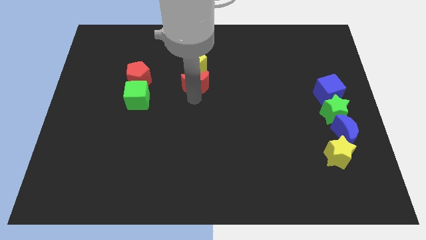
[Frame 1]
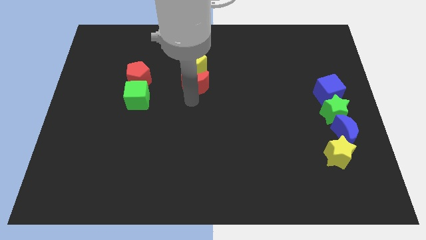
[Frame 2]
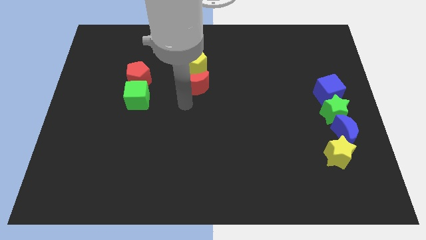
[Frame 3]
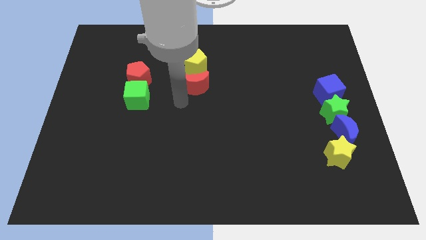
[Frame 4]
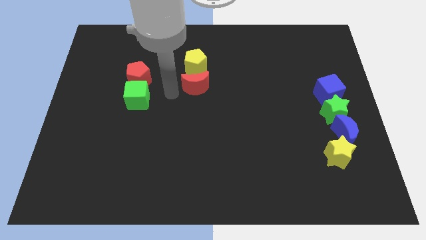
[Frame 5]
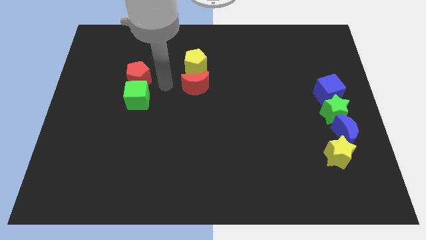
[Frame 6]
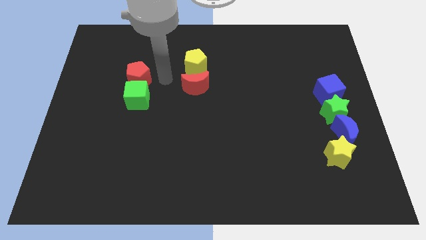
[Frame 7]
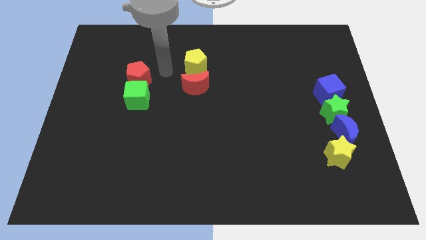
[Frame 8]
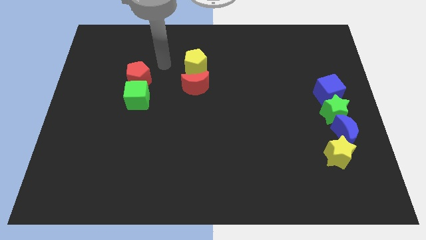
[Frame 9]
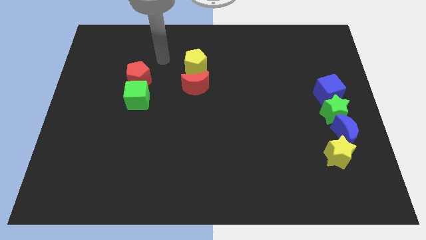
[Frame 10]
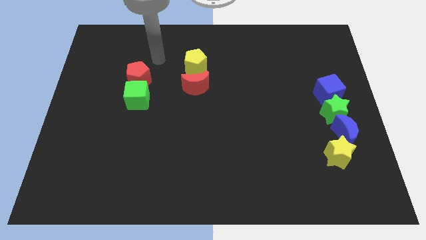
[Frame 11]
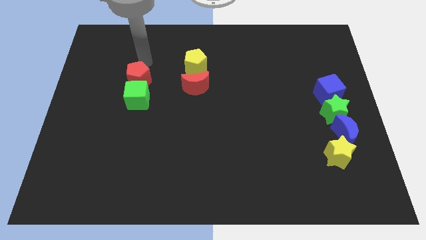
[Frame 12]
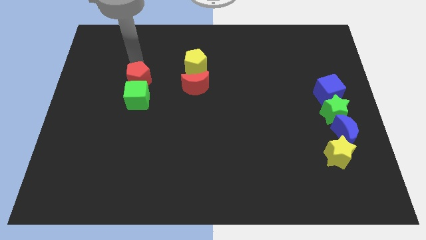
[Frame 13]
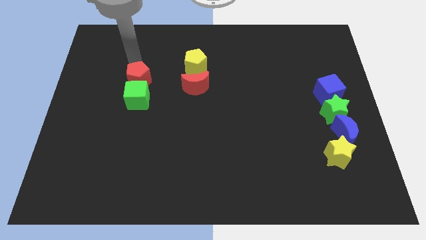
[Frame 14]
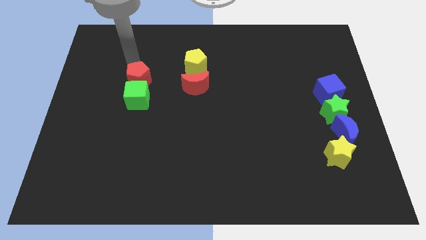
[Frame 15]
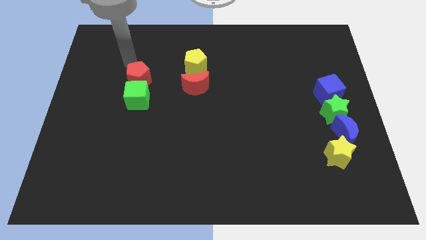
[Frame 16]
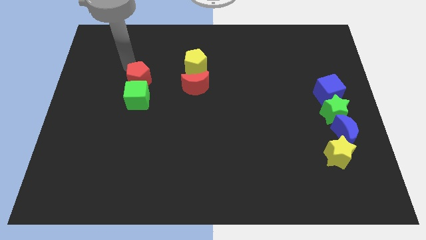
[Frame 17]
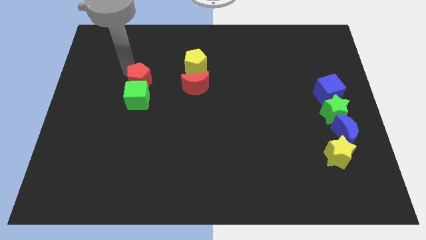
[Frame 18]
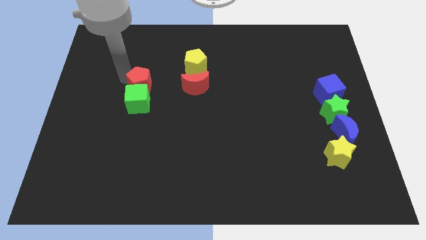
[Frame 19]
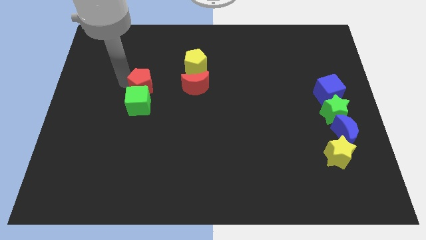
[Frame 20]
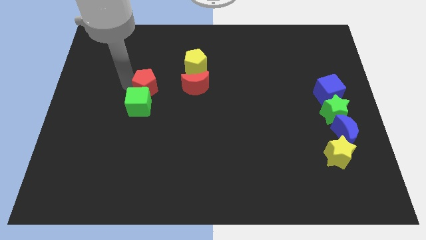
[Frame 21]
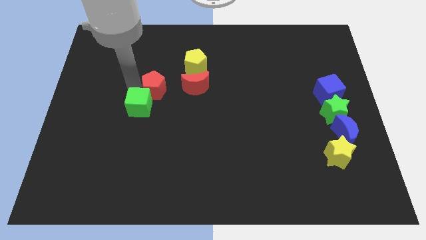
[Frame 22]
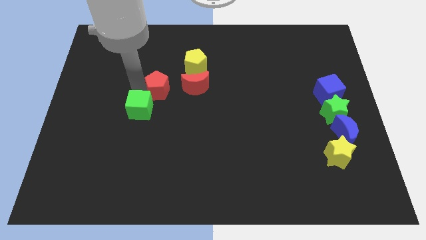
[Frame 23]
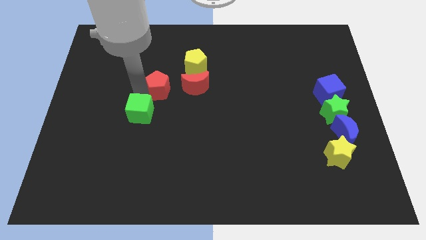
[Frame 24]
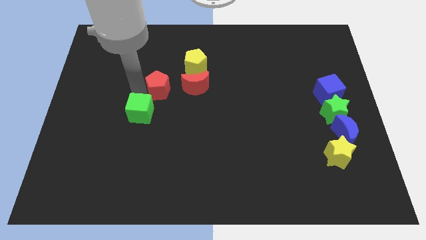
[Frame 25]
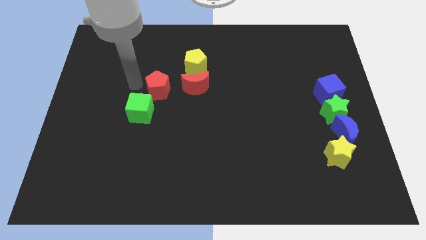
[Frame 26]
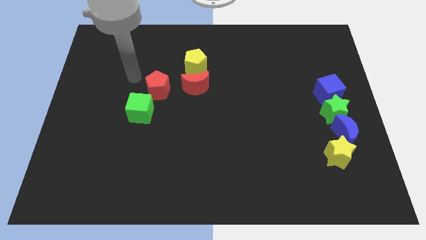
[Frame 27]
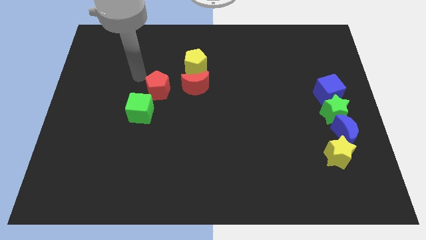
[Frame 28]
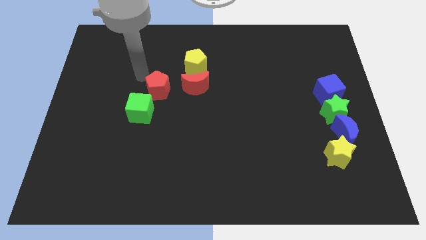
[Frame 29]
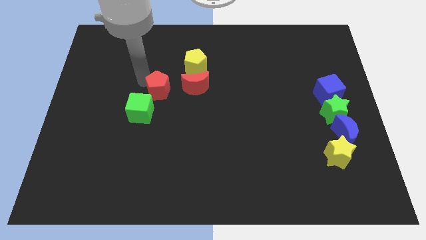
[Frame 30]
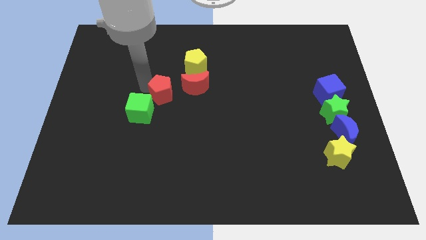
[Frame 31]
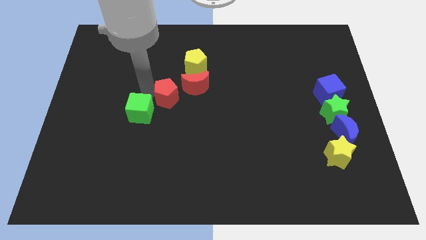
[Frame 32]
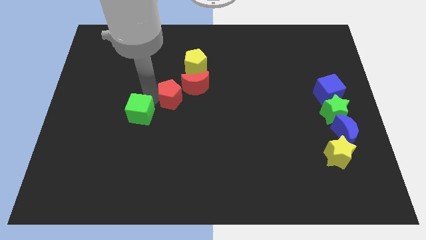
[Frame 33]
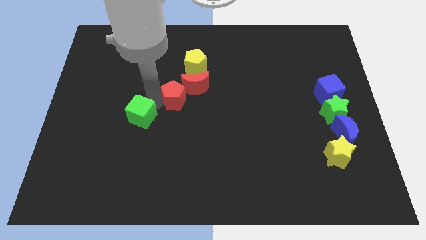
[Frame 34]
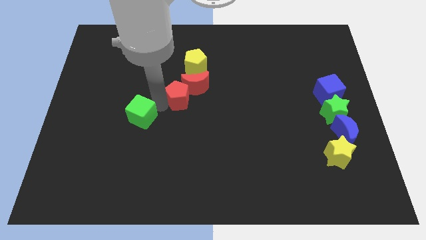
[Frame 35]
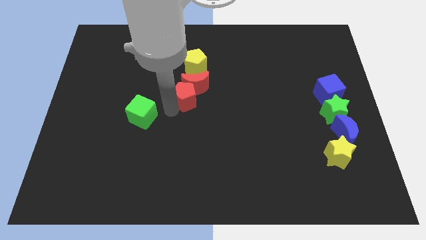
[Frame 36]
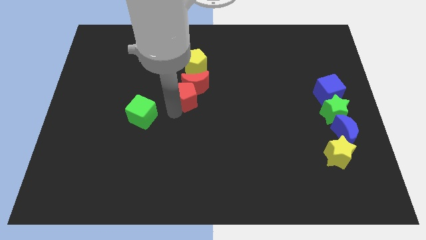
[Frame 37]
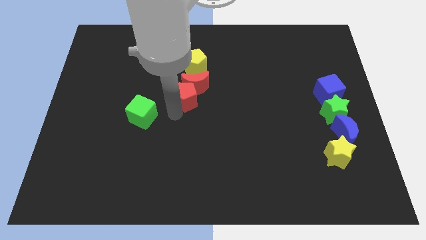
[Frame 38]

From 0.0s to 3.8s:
push the red pentagon below the red crescent

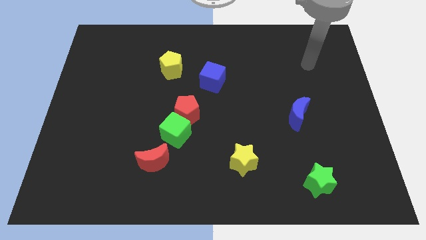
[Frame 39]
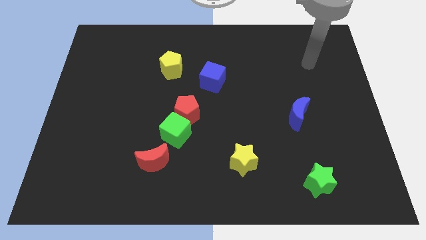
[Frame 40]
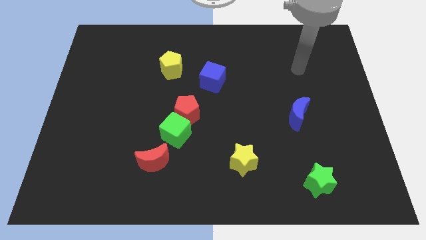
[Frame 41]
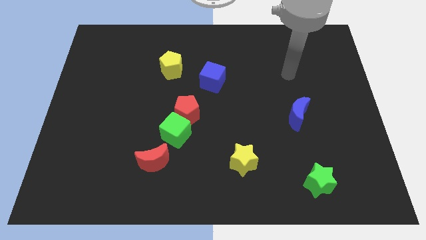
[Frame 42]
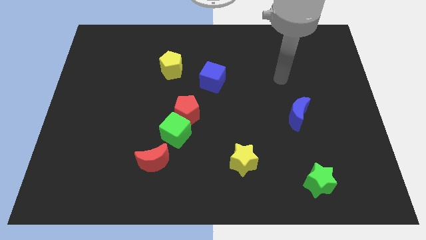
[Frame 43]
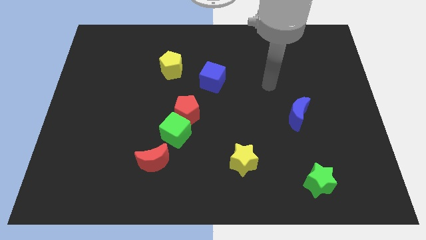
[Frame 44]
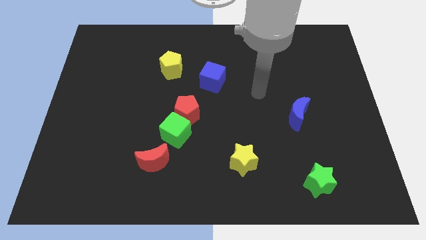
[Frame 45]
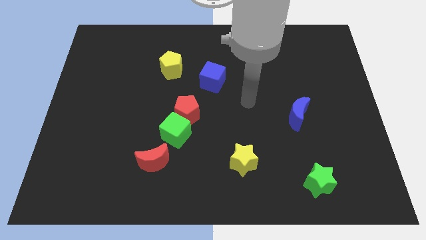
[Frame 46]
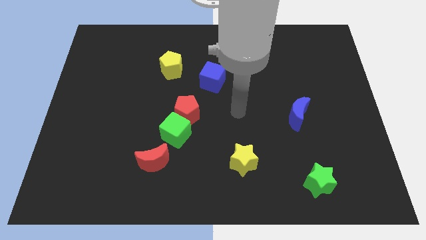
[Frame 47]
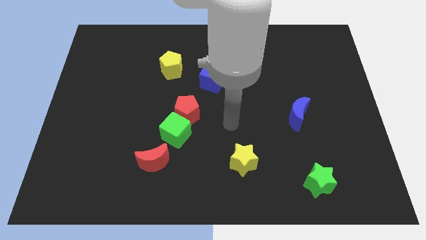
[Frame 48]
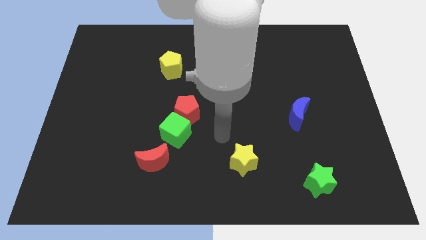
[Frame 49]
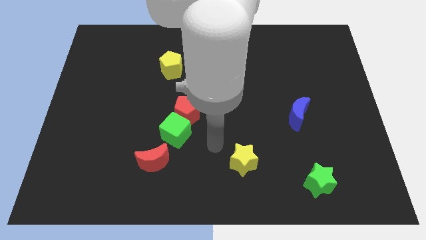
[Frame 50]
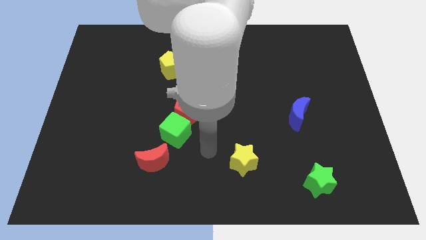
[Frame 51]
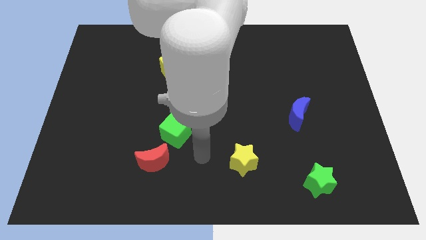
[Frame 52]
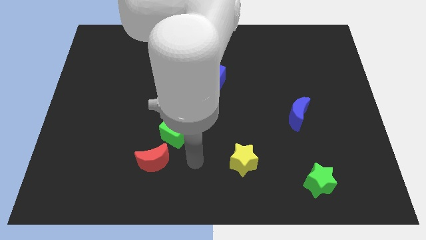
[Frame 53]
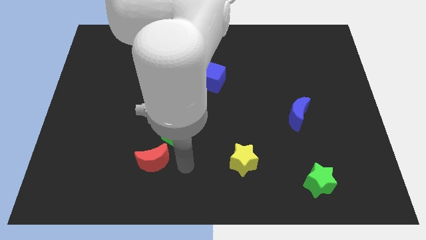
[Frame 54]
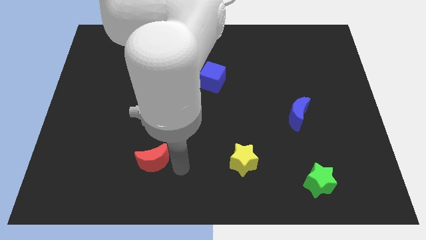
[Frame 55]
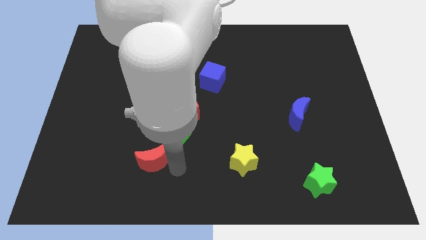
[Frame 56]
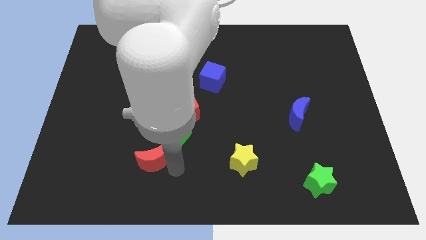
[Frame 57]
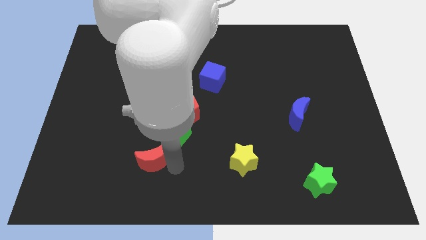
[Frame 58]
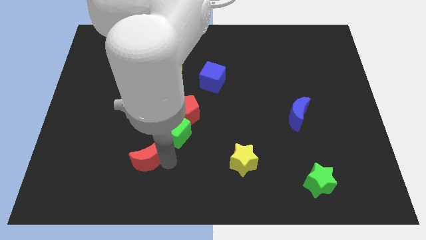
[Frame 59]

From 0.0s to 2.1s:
move your arm towards the red crescent

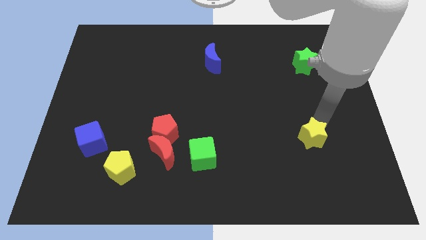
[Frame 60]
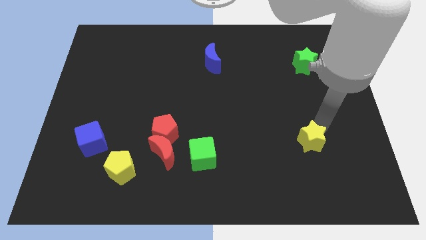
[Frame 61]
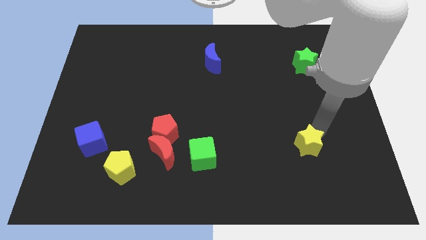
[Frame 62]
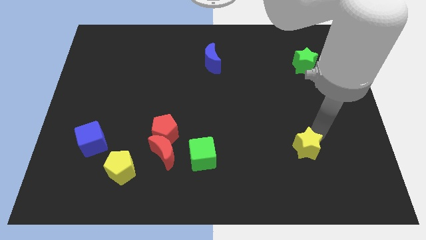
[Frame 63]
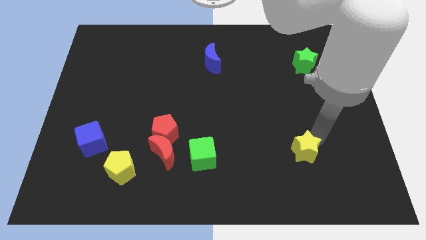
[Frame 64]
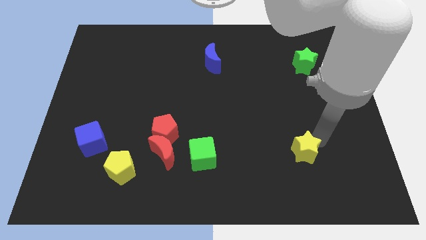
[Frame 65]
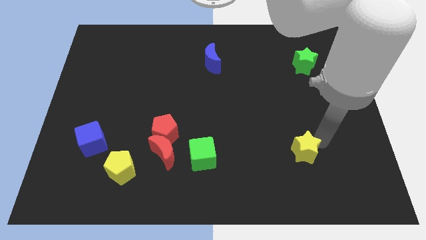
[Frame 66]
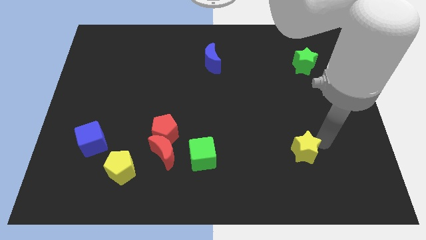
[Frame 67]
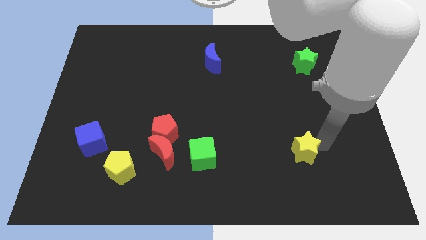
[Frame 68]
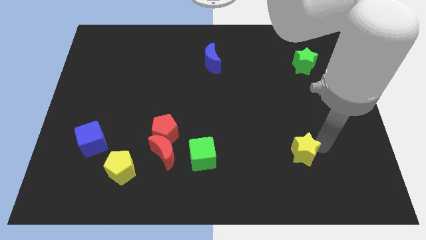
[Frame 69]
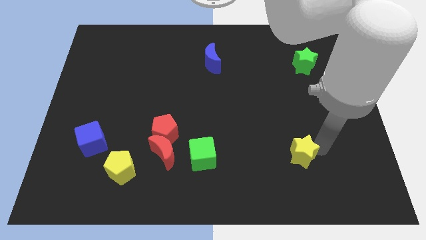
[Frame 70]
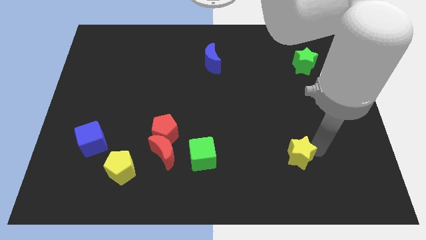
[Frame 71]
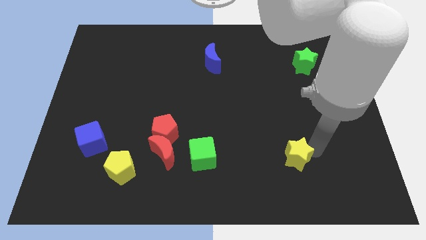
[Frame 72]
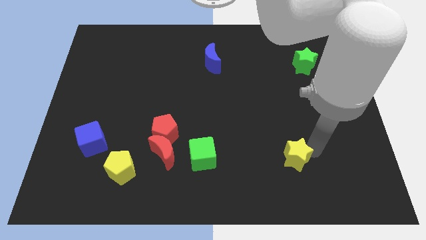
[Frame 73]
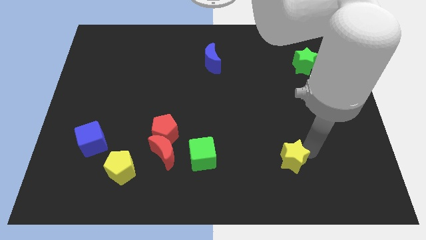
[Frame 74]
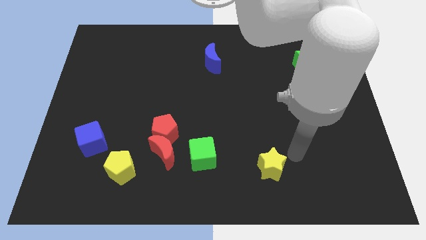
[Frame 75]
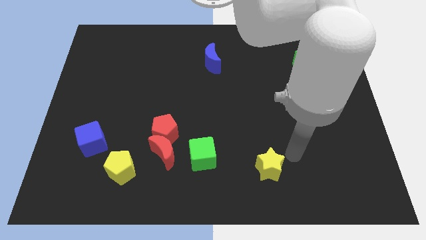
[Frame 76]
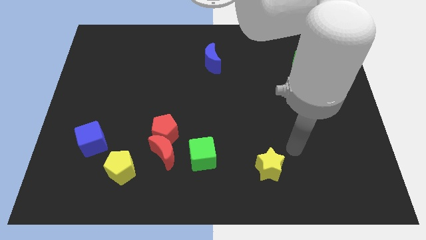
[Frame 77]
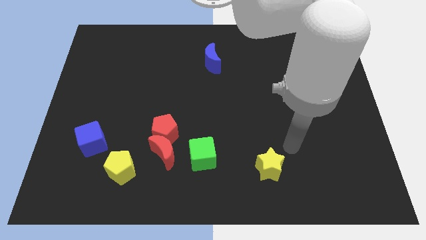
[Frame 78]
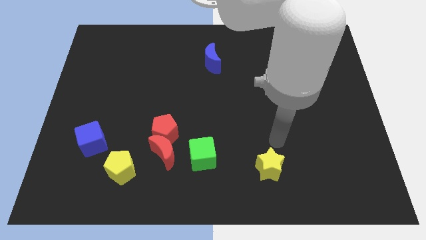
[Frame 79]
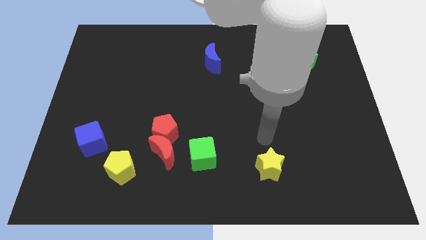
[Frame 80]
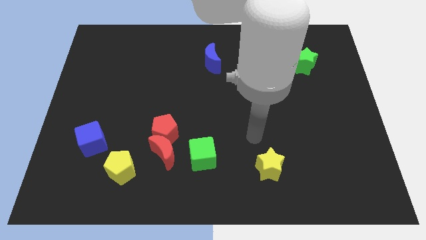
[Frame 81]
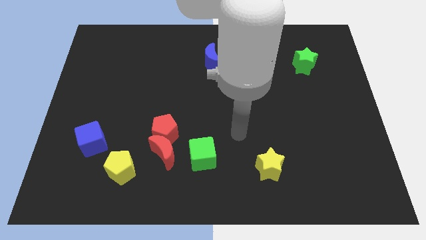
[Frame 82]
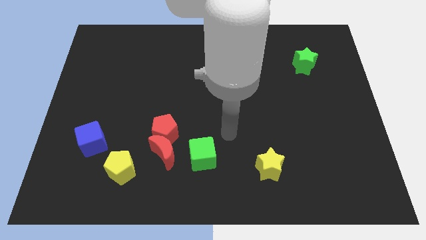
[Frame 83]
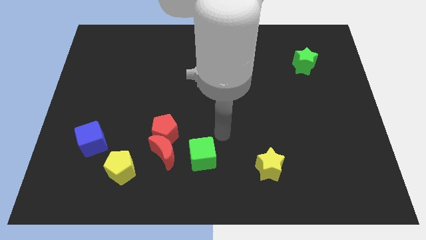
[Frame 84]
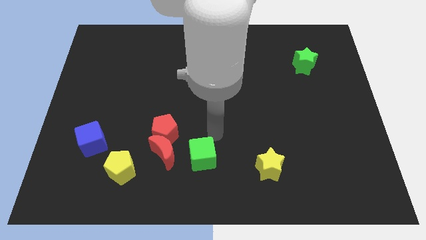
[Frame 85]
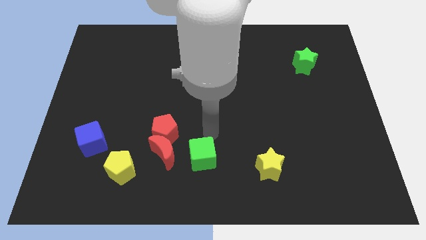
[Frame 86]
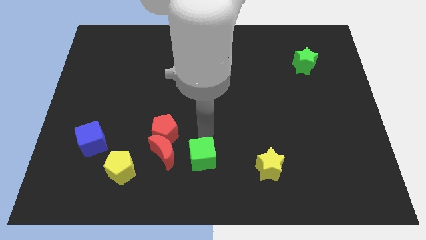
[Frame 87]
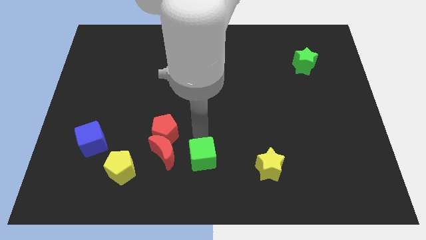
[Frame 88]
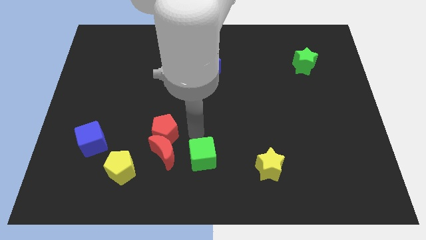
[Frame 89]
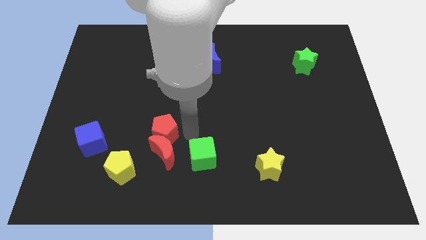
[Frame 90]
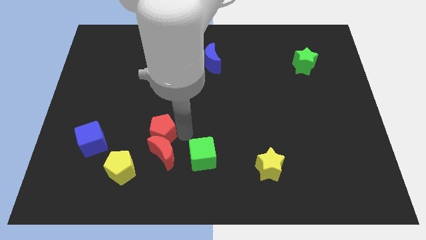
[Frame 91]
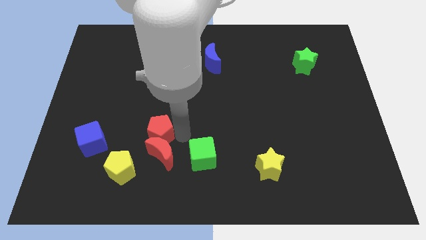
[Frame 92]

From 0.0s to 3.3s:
place the yellow star to the right of the green cube
